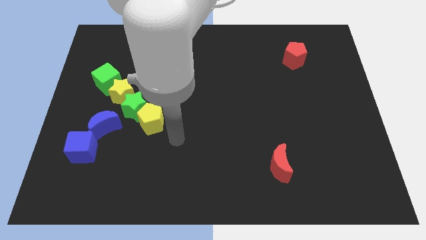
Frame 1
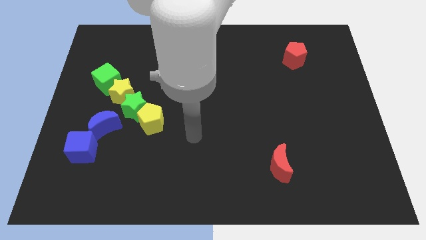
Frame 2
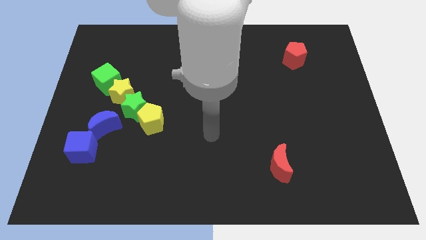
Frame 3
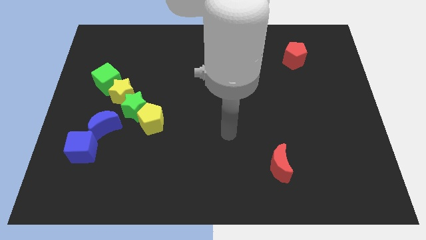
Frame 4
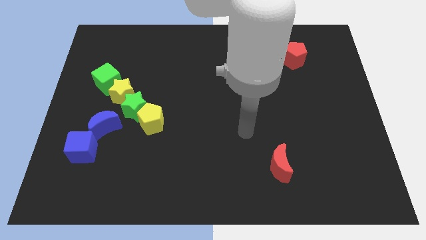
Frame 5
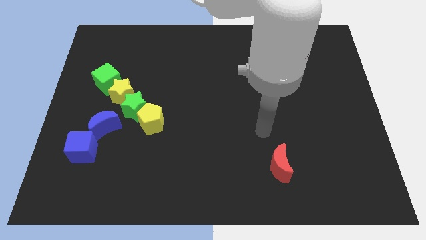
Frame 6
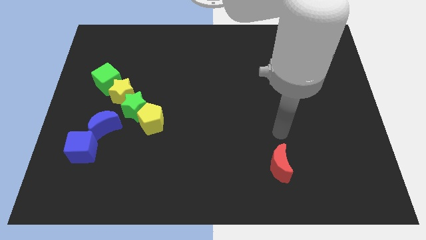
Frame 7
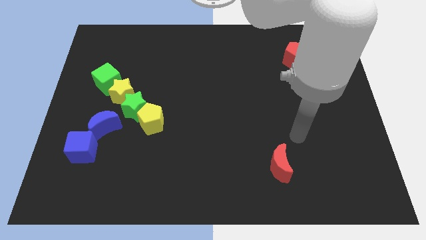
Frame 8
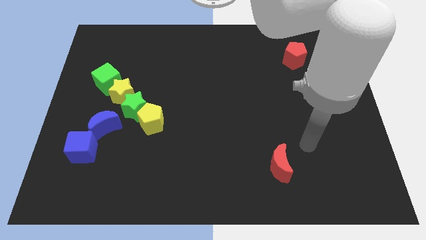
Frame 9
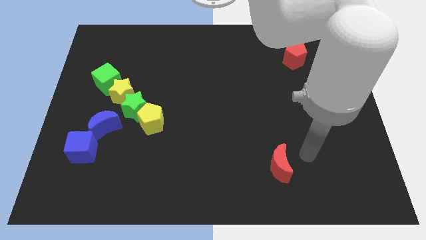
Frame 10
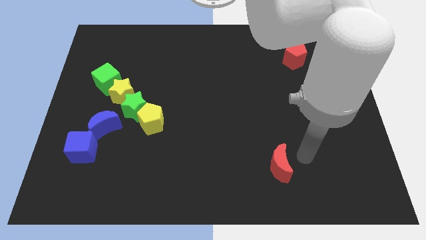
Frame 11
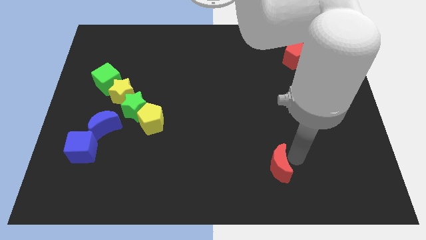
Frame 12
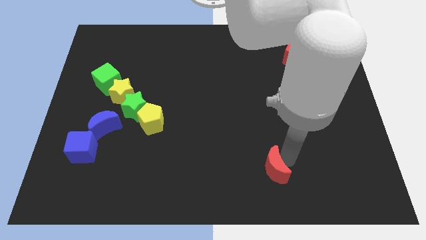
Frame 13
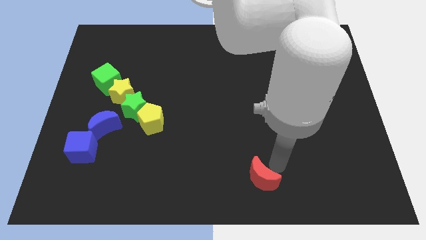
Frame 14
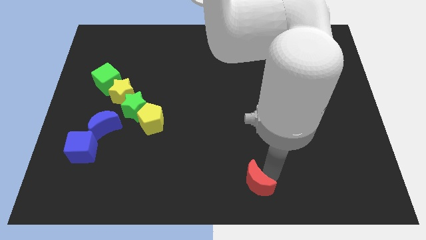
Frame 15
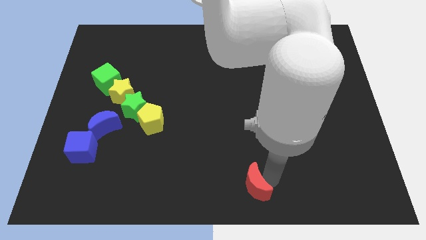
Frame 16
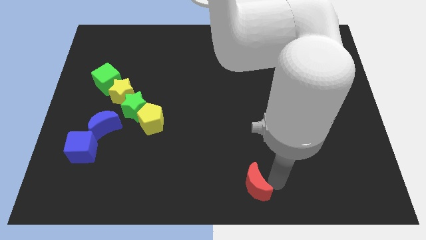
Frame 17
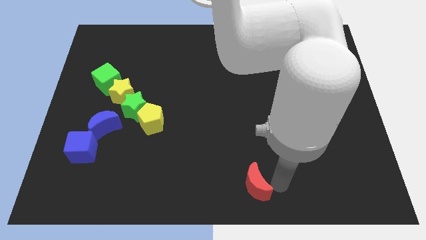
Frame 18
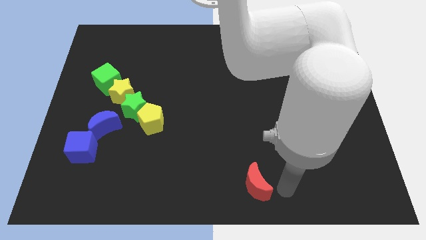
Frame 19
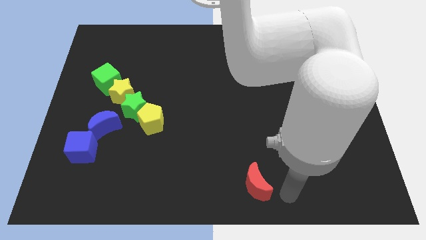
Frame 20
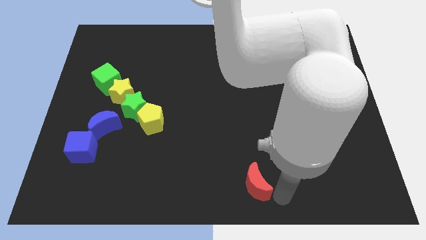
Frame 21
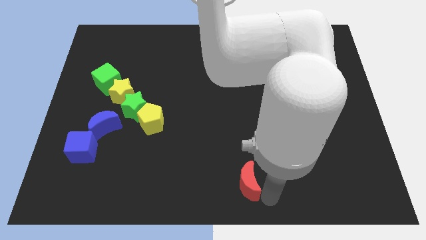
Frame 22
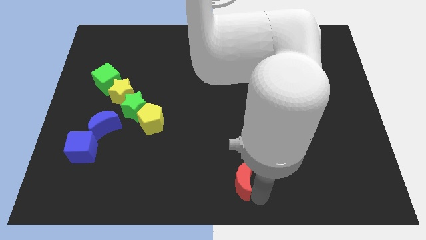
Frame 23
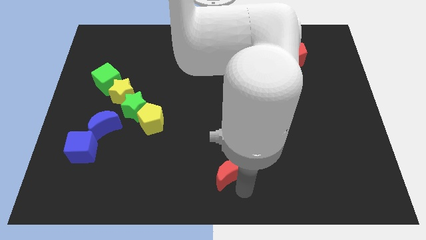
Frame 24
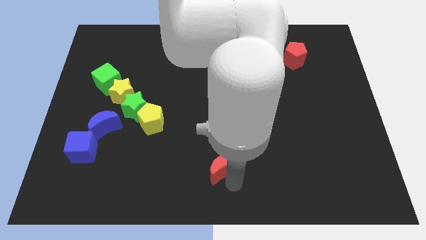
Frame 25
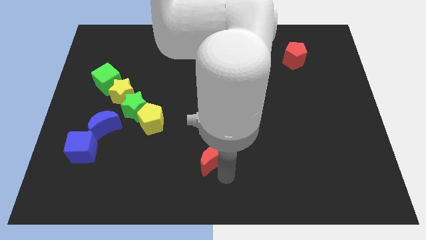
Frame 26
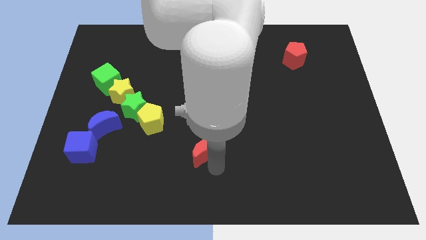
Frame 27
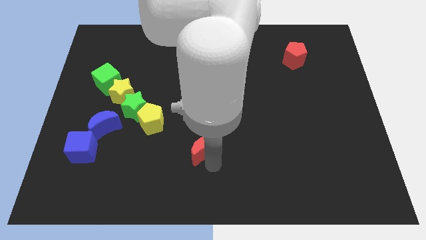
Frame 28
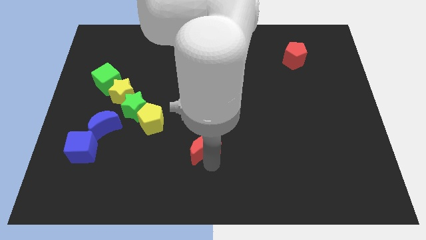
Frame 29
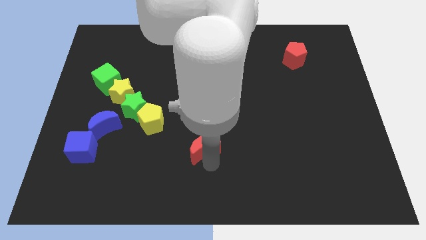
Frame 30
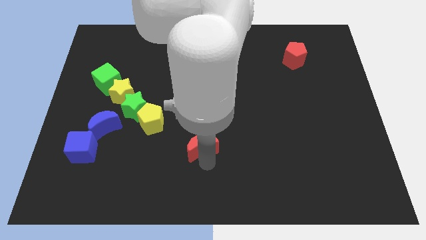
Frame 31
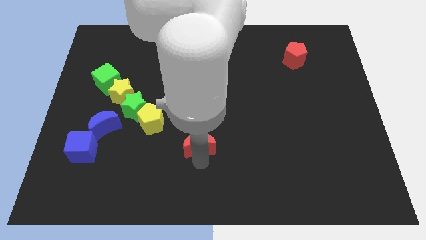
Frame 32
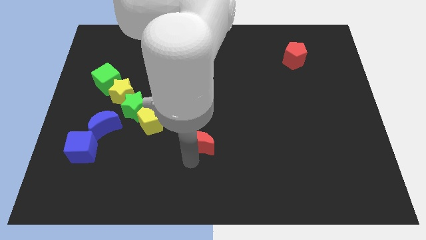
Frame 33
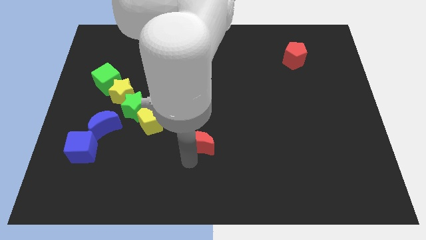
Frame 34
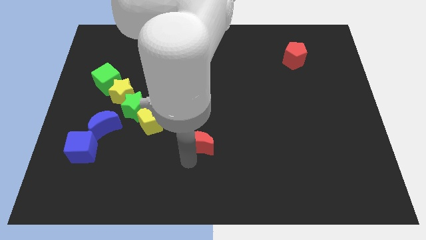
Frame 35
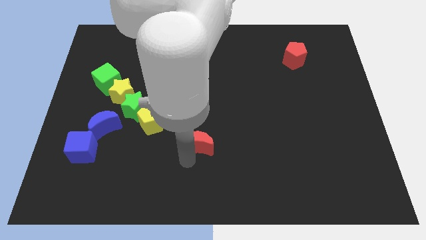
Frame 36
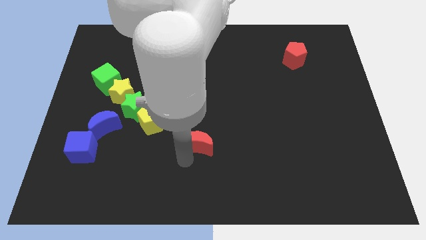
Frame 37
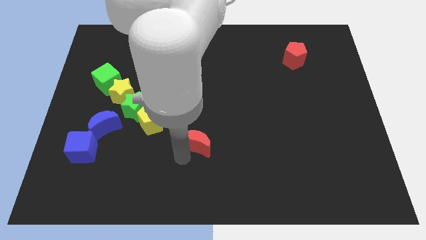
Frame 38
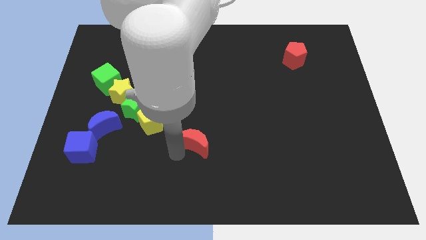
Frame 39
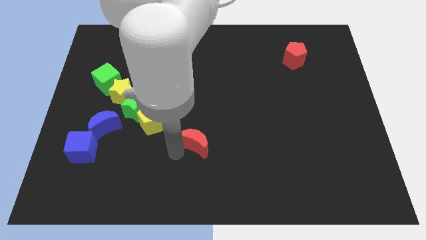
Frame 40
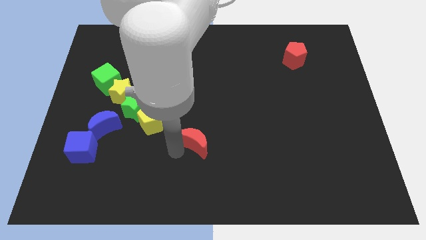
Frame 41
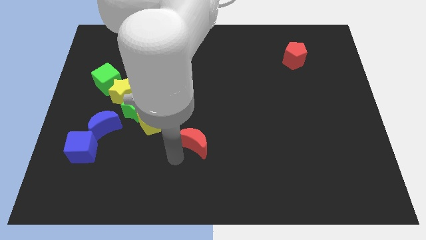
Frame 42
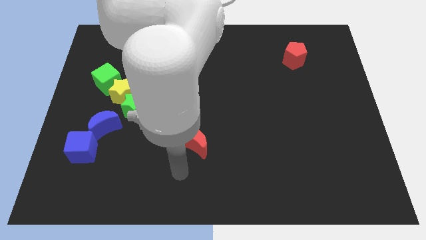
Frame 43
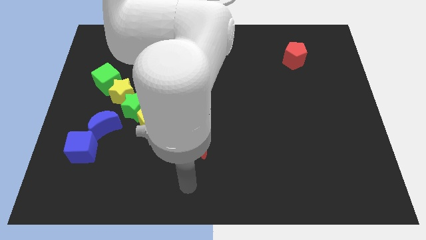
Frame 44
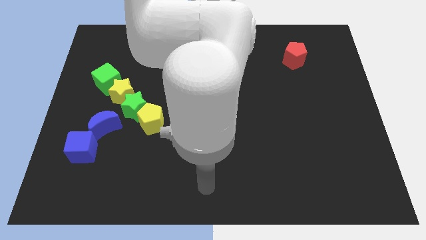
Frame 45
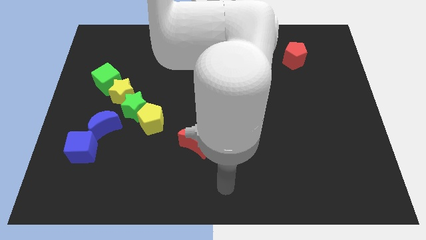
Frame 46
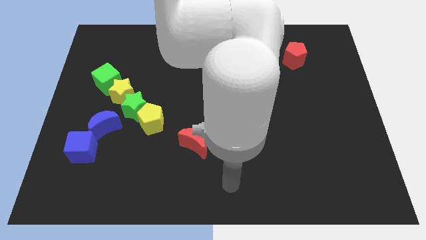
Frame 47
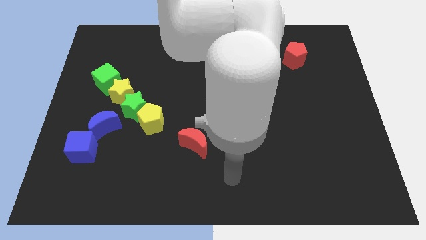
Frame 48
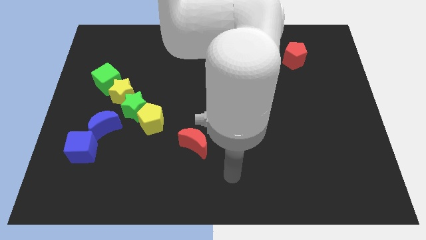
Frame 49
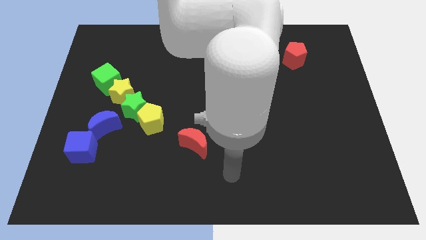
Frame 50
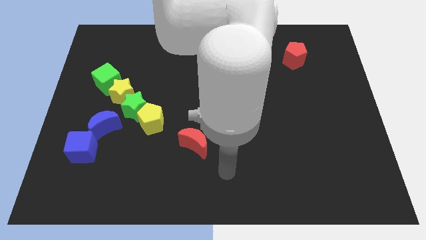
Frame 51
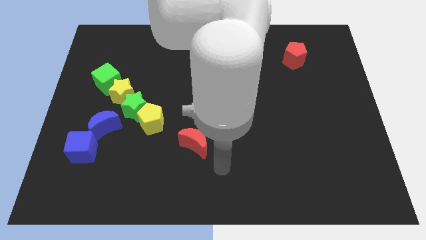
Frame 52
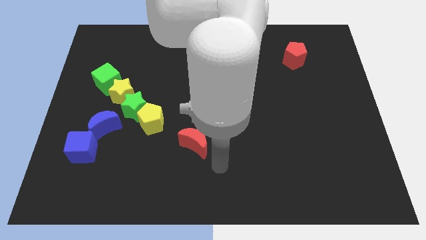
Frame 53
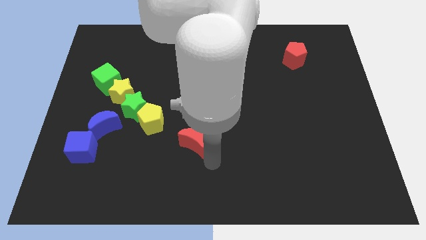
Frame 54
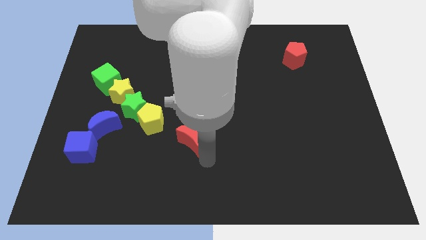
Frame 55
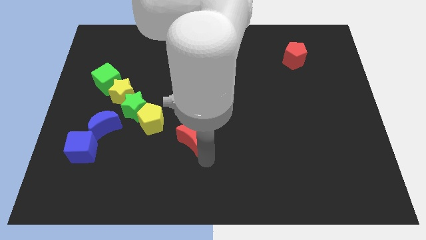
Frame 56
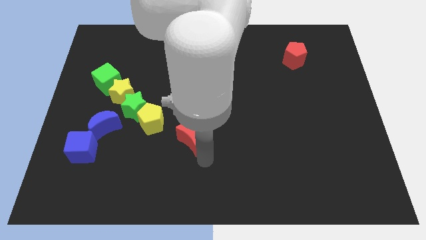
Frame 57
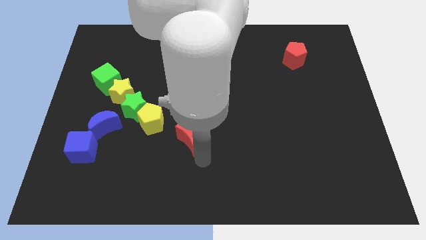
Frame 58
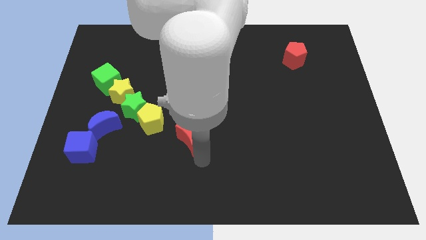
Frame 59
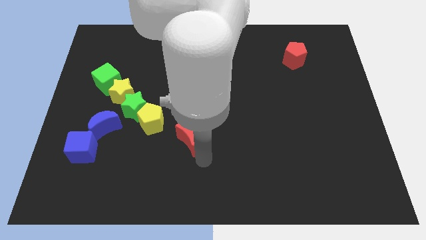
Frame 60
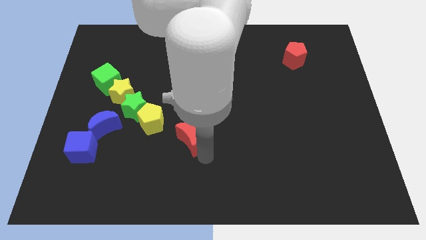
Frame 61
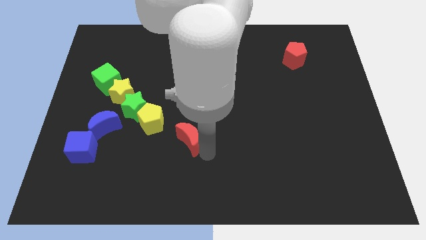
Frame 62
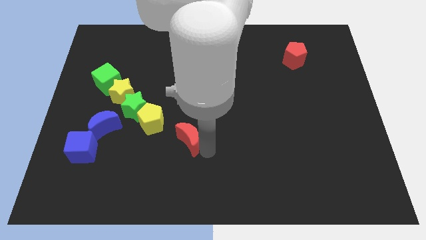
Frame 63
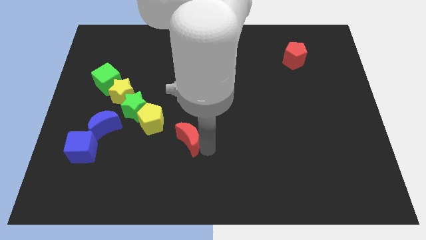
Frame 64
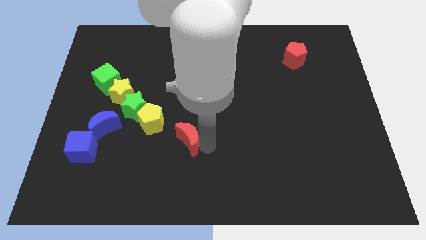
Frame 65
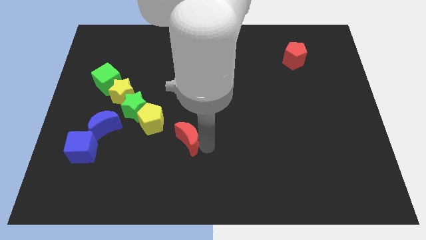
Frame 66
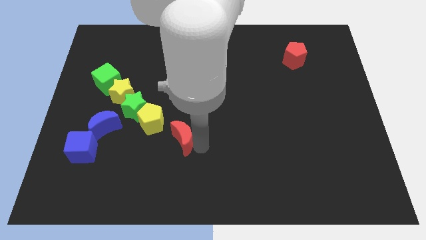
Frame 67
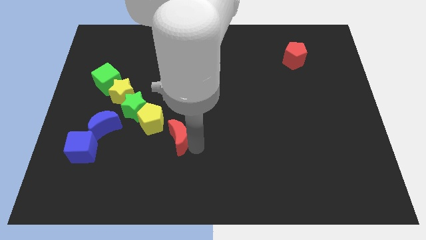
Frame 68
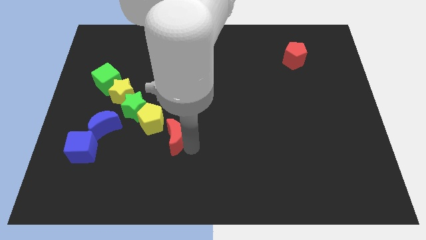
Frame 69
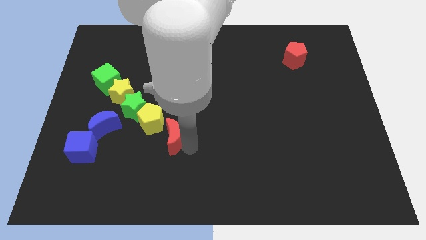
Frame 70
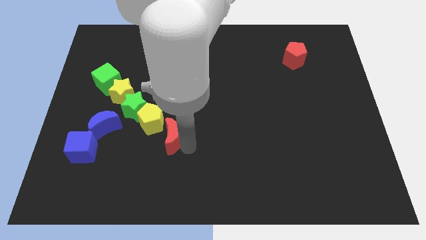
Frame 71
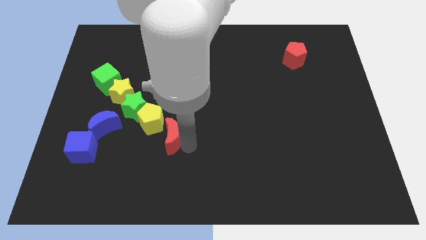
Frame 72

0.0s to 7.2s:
push the red crescent to the bottom right of the yellow pentagon

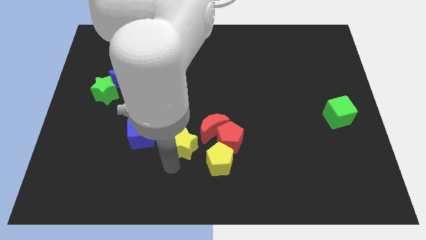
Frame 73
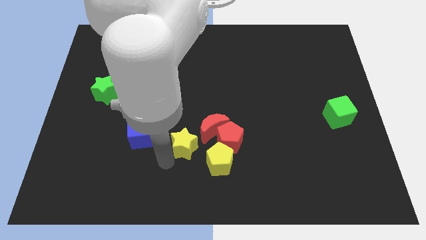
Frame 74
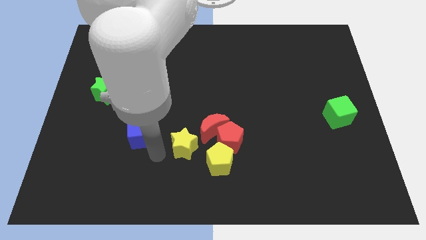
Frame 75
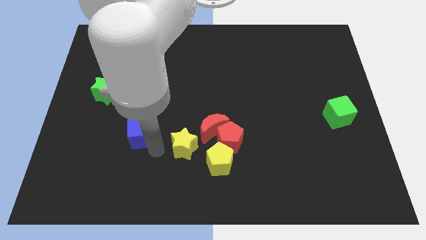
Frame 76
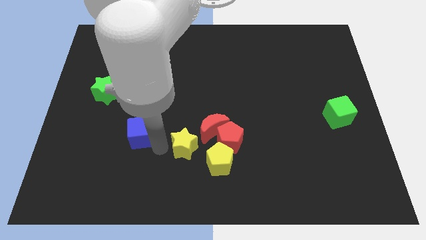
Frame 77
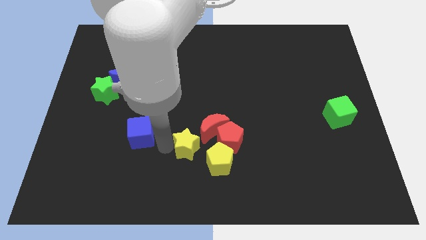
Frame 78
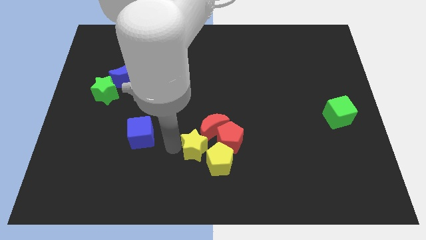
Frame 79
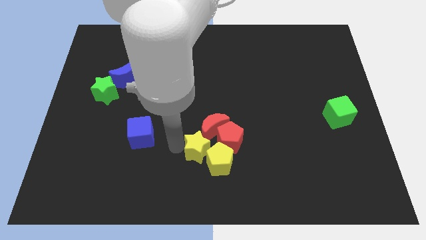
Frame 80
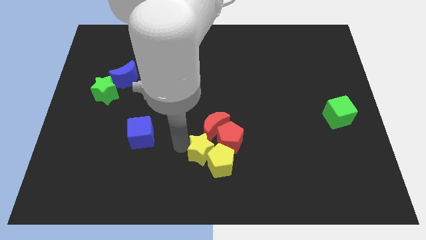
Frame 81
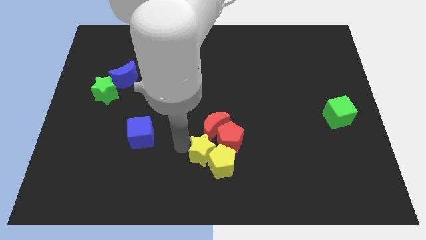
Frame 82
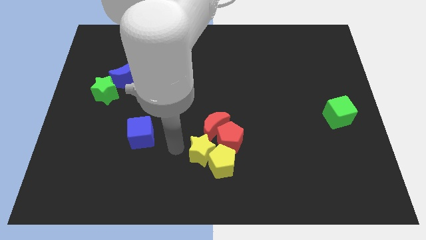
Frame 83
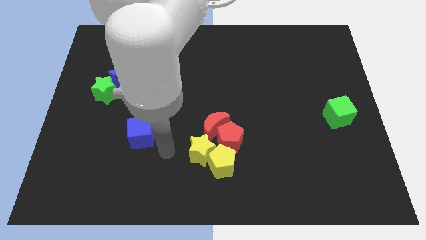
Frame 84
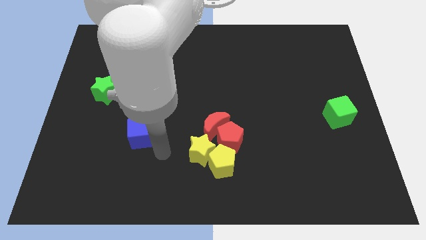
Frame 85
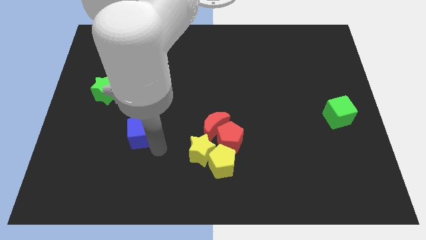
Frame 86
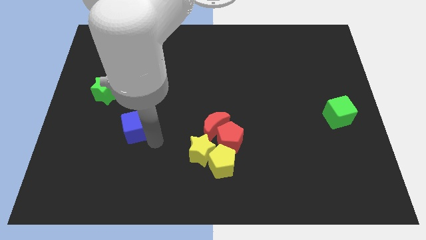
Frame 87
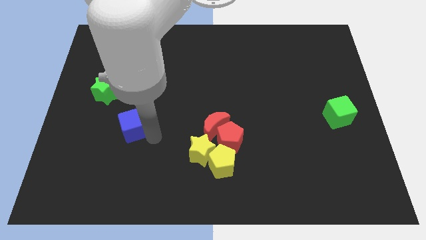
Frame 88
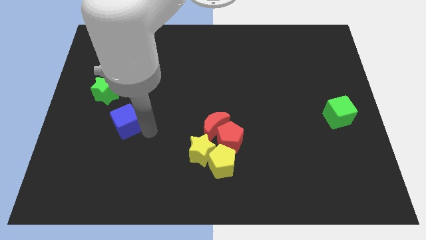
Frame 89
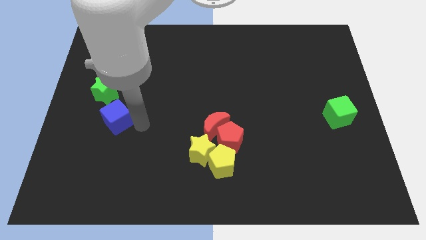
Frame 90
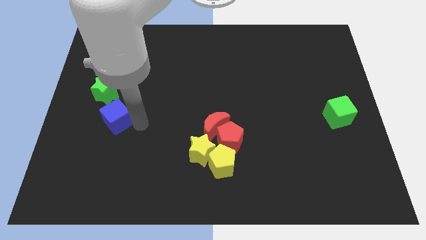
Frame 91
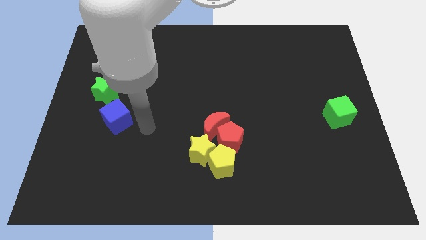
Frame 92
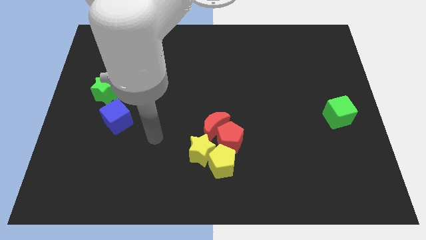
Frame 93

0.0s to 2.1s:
push the blue cube towards the green star
